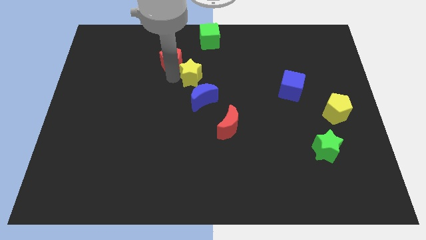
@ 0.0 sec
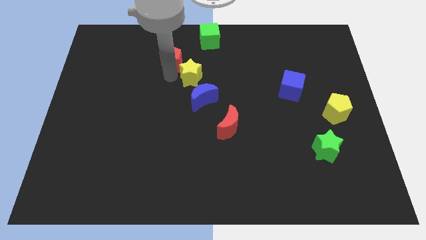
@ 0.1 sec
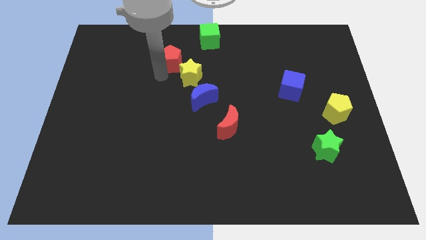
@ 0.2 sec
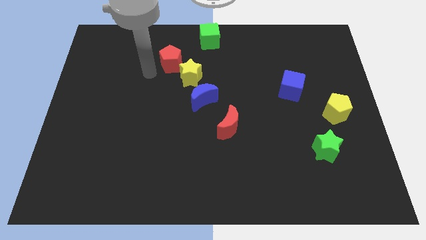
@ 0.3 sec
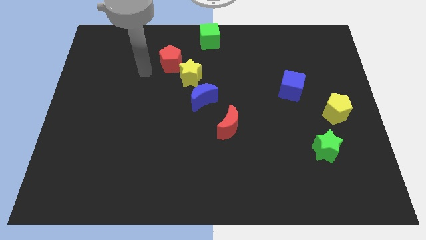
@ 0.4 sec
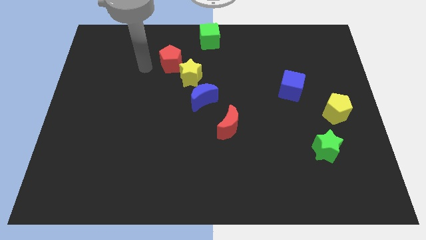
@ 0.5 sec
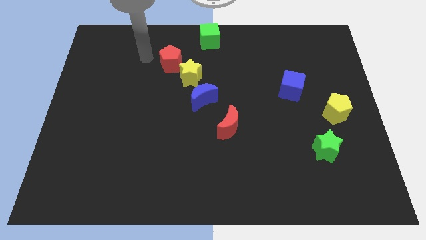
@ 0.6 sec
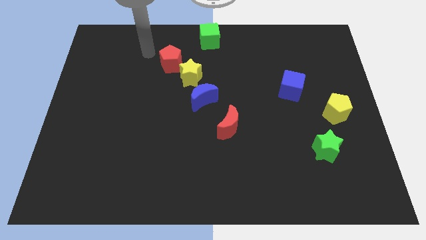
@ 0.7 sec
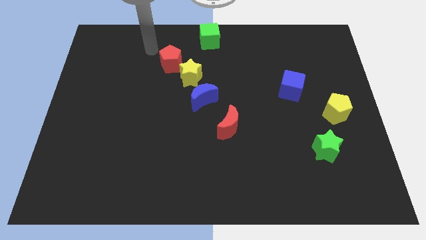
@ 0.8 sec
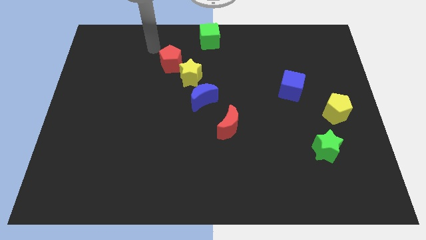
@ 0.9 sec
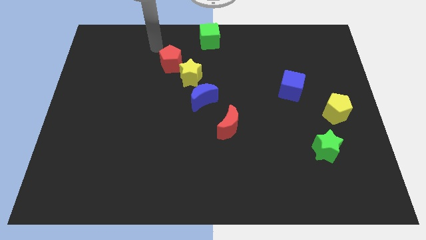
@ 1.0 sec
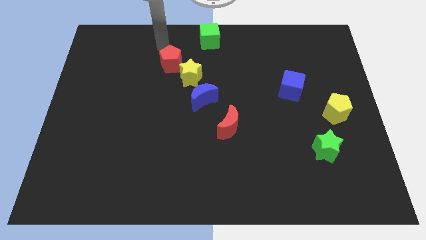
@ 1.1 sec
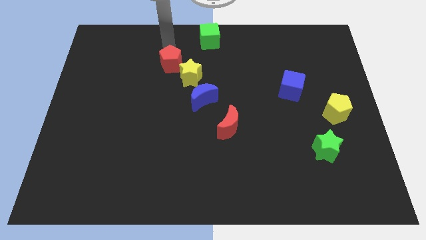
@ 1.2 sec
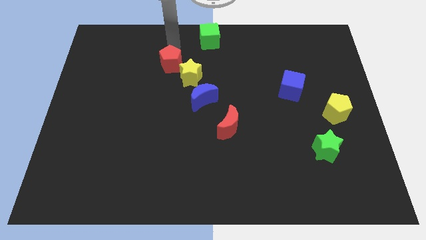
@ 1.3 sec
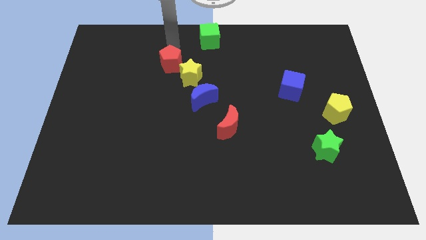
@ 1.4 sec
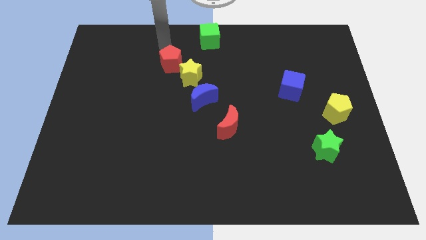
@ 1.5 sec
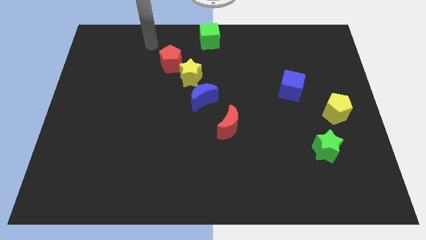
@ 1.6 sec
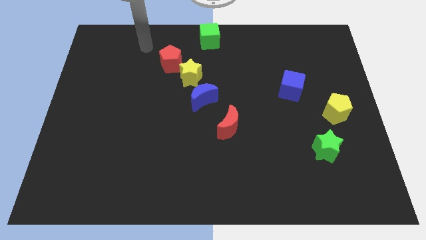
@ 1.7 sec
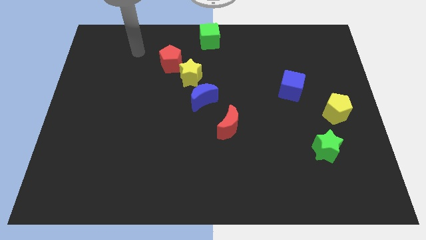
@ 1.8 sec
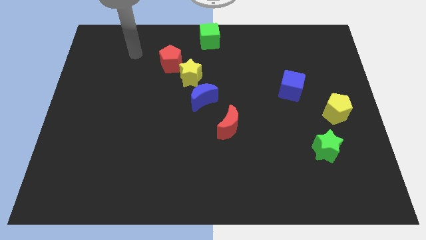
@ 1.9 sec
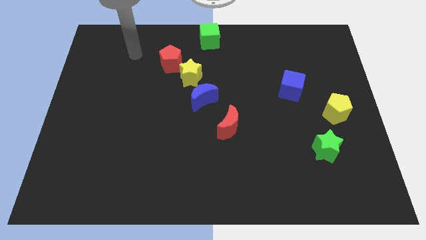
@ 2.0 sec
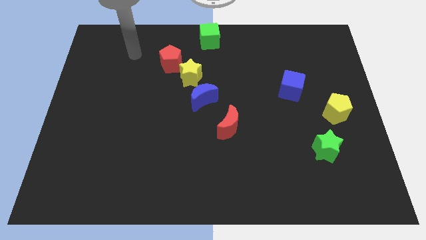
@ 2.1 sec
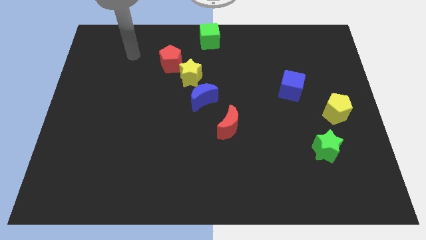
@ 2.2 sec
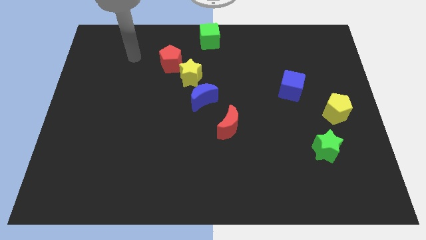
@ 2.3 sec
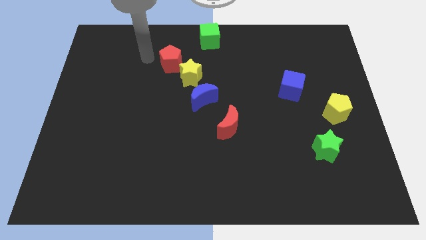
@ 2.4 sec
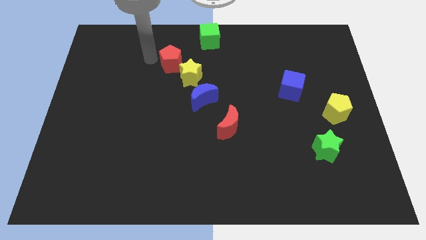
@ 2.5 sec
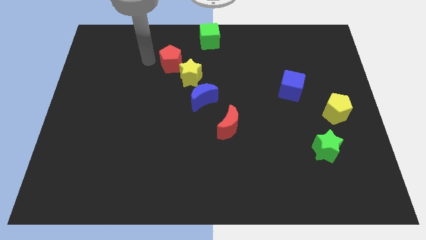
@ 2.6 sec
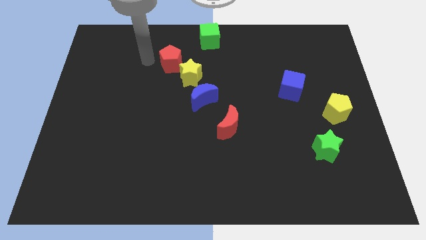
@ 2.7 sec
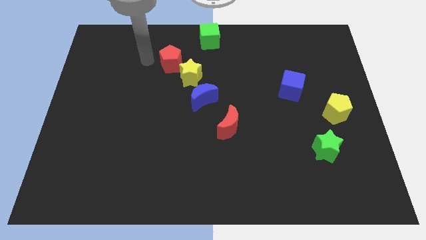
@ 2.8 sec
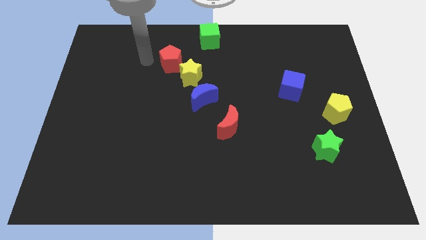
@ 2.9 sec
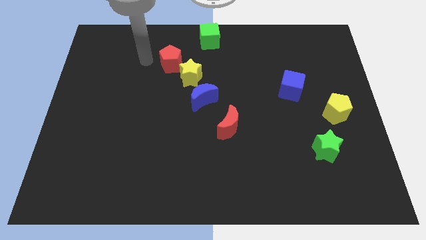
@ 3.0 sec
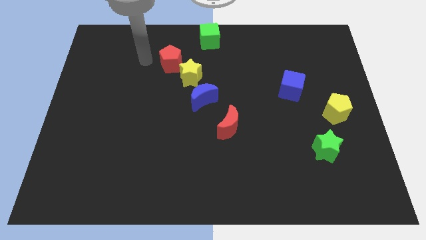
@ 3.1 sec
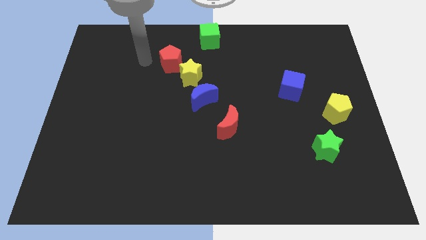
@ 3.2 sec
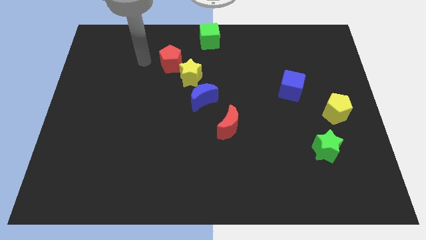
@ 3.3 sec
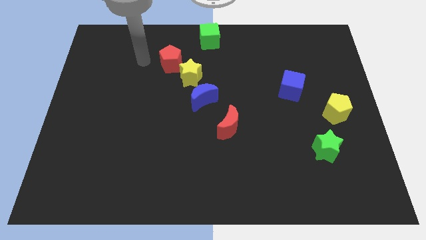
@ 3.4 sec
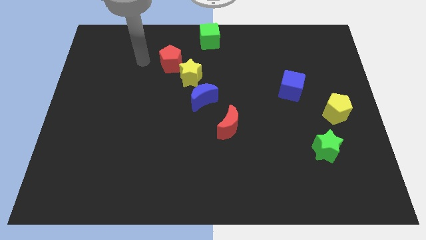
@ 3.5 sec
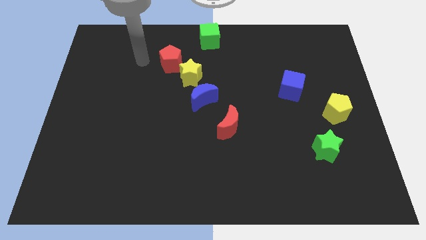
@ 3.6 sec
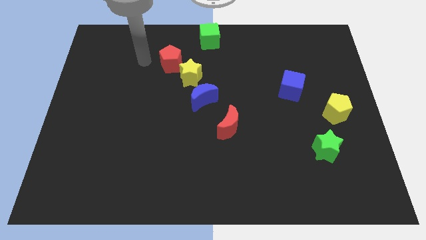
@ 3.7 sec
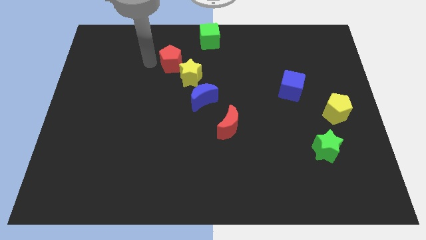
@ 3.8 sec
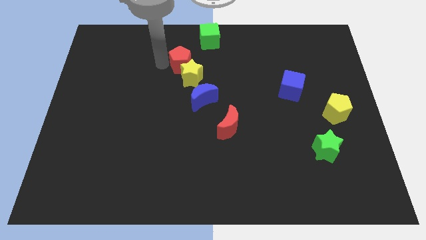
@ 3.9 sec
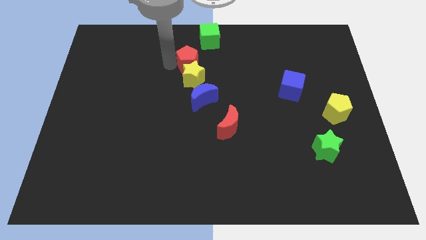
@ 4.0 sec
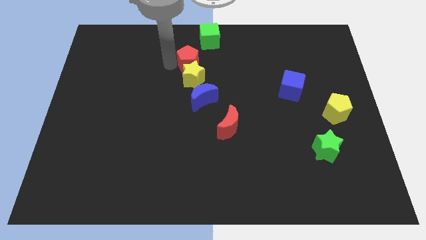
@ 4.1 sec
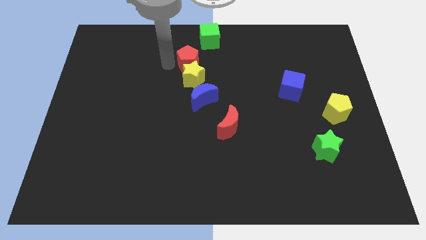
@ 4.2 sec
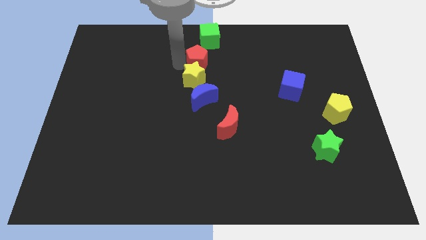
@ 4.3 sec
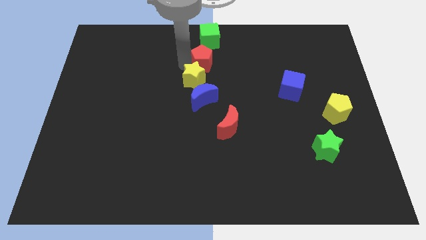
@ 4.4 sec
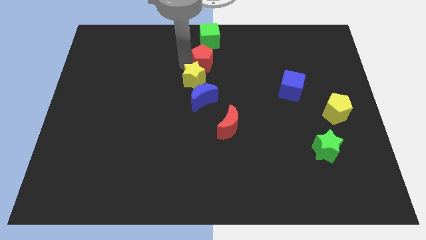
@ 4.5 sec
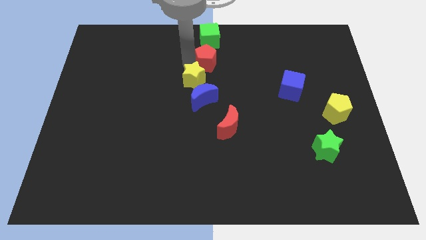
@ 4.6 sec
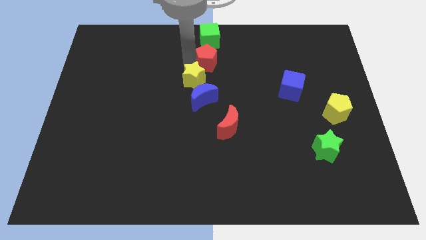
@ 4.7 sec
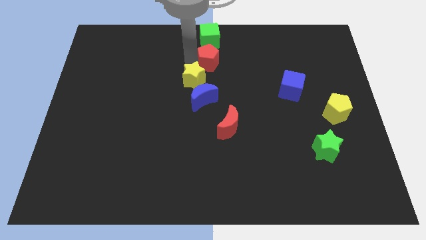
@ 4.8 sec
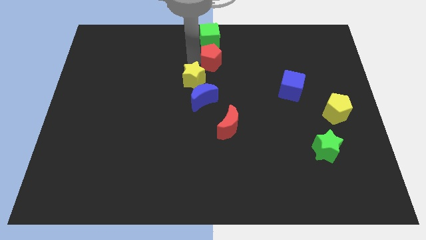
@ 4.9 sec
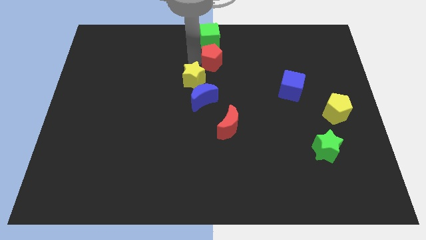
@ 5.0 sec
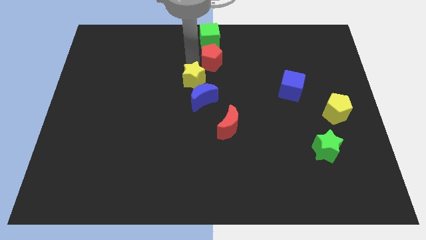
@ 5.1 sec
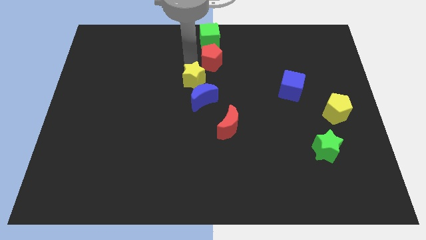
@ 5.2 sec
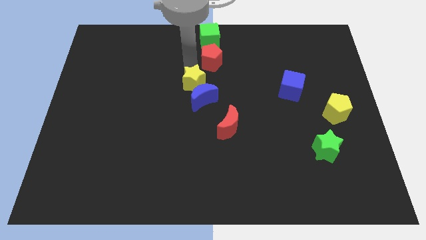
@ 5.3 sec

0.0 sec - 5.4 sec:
move the red pentagon underneath the green cube

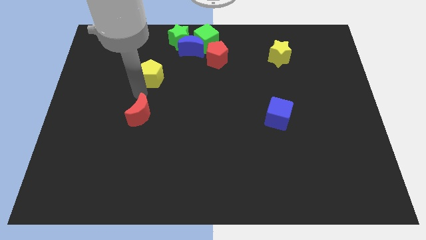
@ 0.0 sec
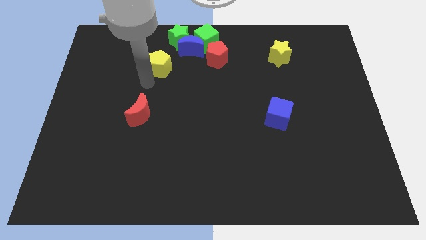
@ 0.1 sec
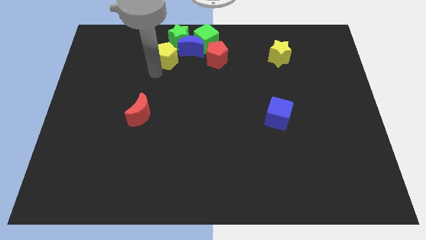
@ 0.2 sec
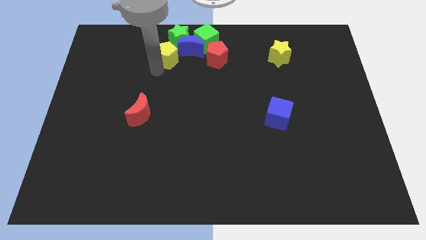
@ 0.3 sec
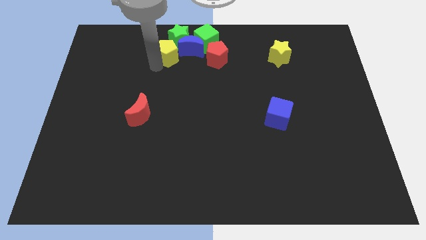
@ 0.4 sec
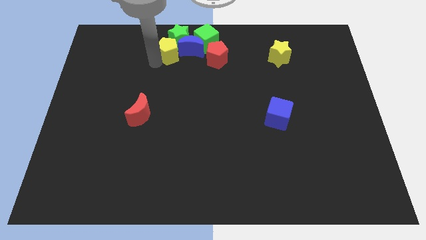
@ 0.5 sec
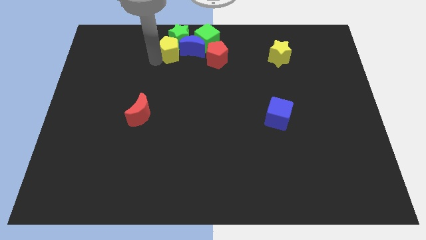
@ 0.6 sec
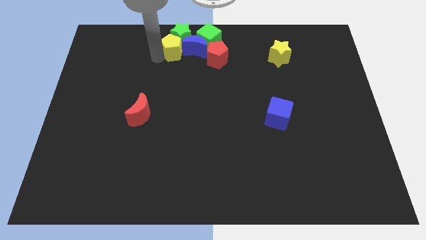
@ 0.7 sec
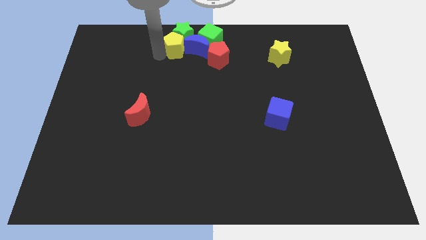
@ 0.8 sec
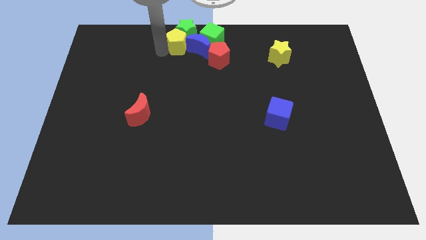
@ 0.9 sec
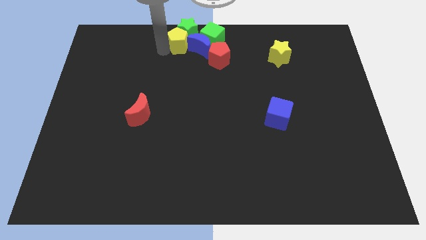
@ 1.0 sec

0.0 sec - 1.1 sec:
put the yellow pentagon to the bottom of the green star

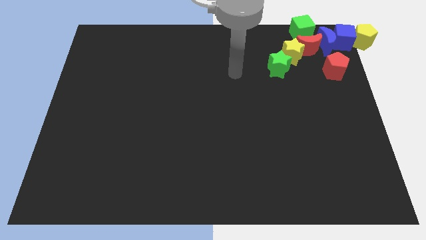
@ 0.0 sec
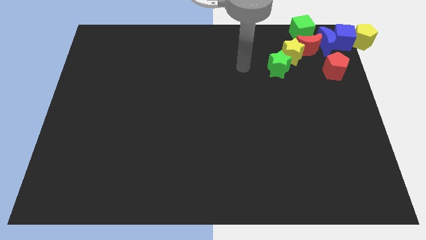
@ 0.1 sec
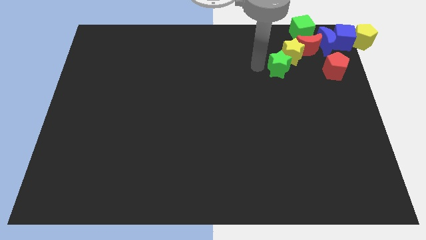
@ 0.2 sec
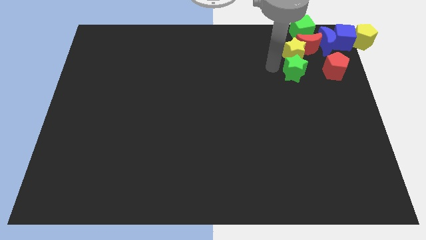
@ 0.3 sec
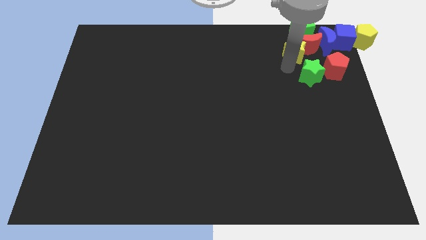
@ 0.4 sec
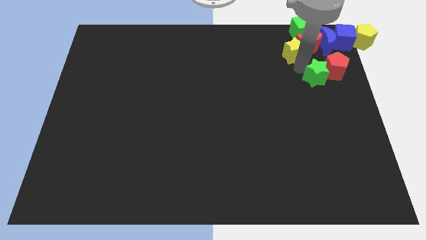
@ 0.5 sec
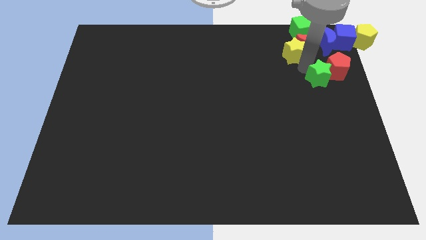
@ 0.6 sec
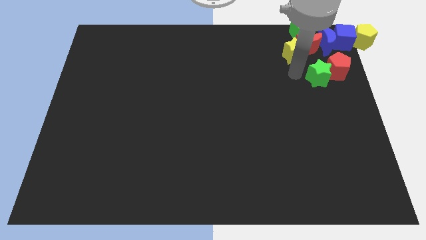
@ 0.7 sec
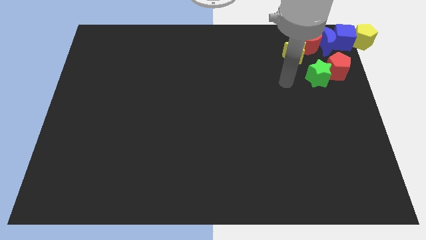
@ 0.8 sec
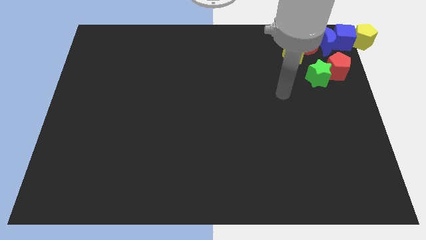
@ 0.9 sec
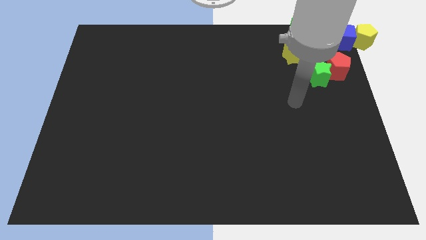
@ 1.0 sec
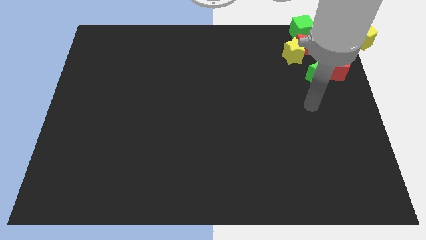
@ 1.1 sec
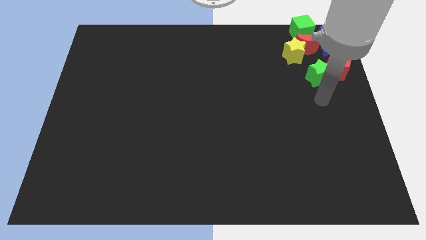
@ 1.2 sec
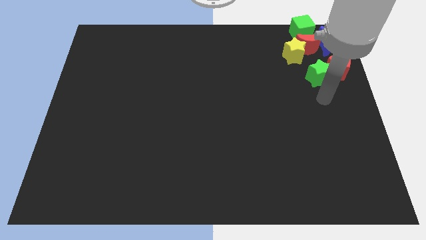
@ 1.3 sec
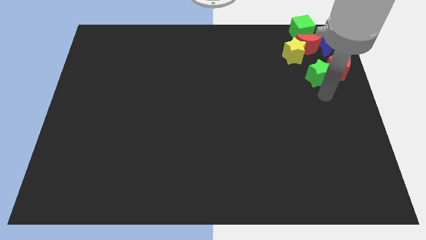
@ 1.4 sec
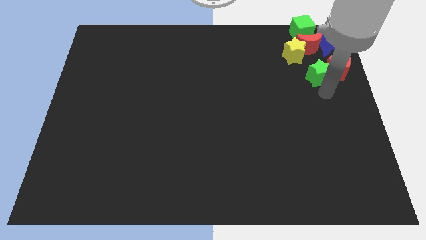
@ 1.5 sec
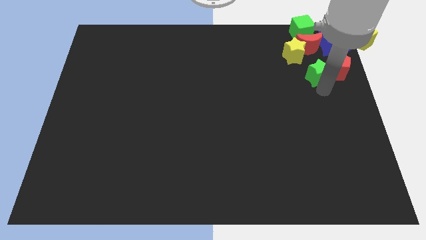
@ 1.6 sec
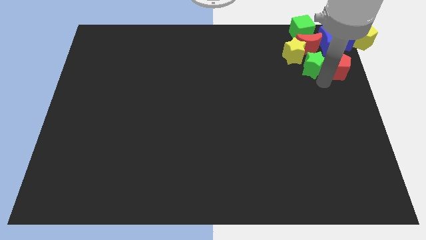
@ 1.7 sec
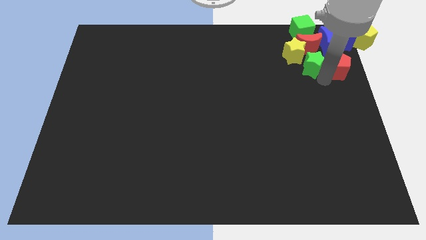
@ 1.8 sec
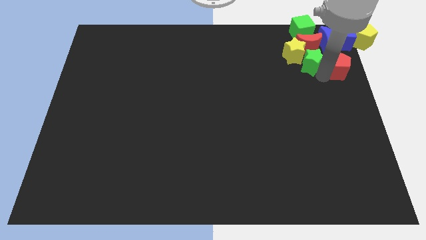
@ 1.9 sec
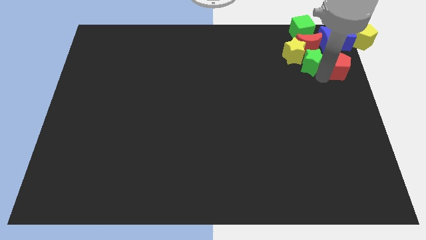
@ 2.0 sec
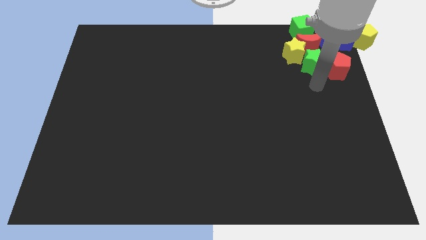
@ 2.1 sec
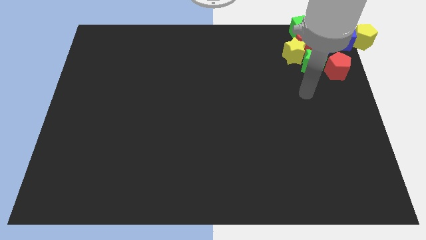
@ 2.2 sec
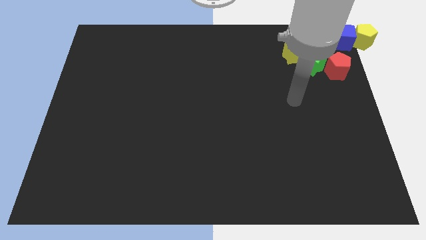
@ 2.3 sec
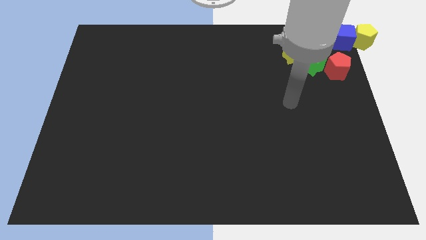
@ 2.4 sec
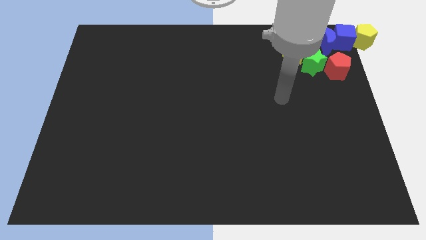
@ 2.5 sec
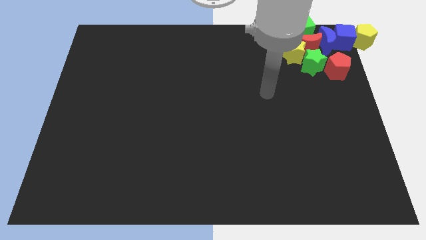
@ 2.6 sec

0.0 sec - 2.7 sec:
place the green star in between the yellow star and red pentagon
